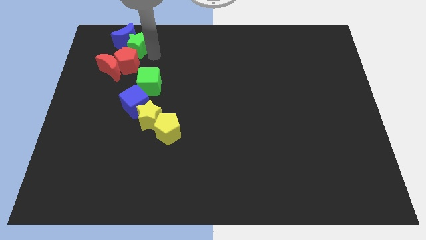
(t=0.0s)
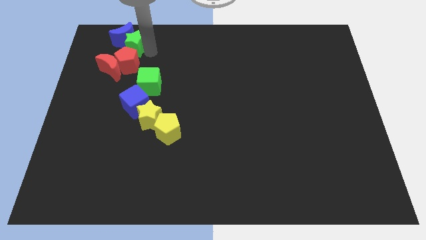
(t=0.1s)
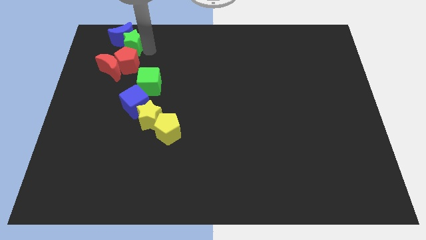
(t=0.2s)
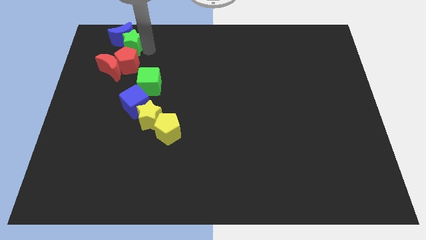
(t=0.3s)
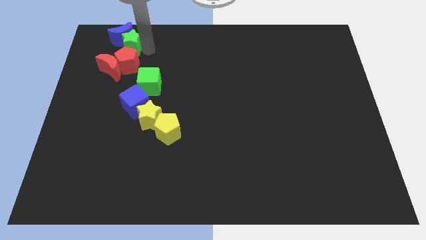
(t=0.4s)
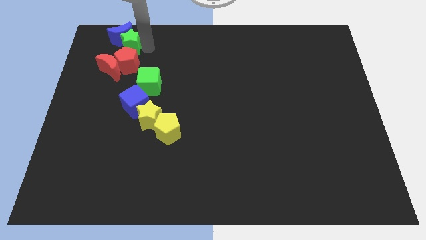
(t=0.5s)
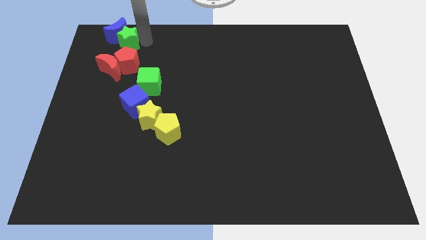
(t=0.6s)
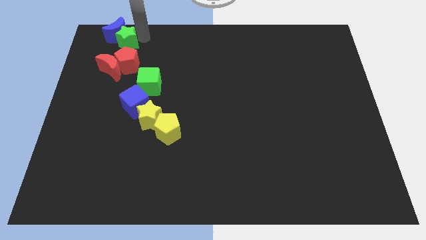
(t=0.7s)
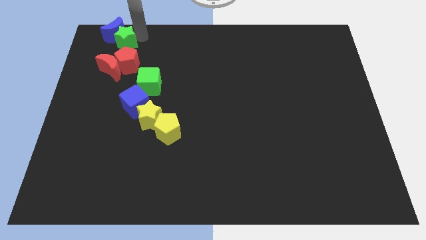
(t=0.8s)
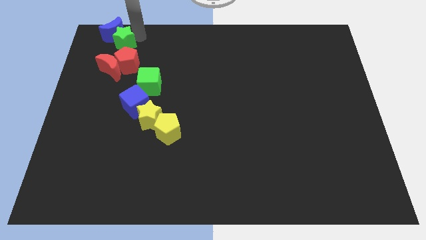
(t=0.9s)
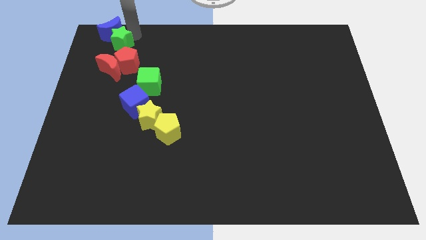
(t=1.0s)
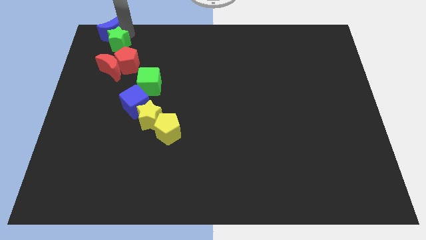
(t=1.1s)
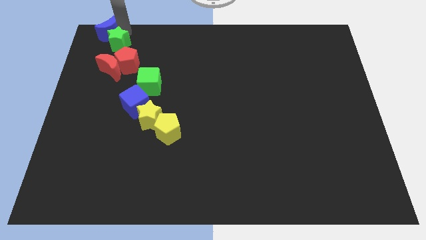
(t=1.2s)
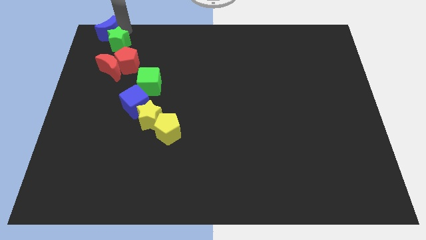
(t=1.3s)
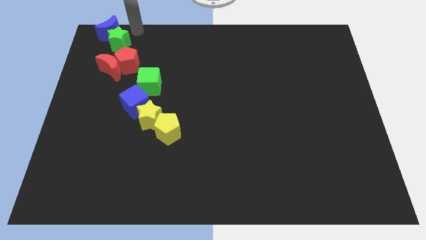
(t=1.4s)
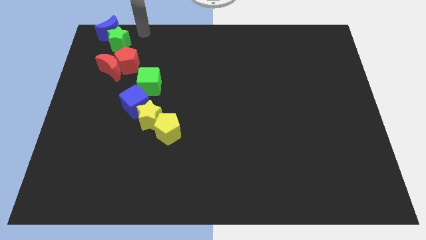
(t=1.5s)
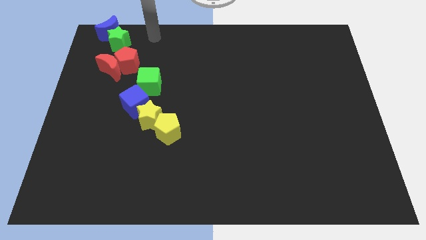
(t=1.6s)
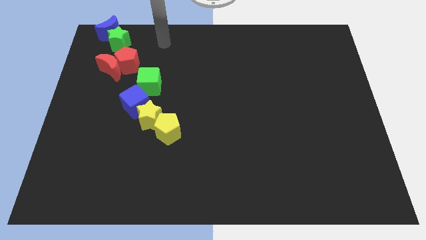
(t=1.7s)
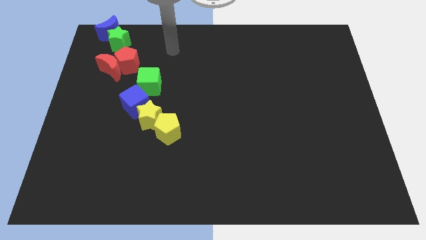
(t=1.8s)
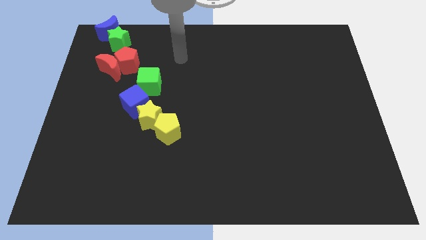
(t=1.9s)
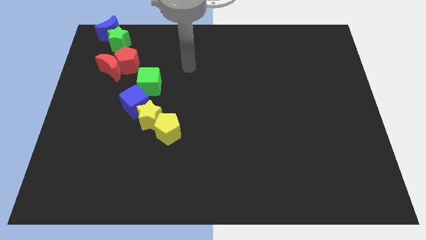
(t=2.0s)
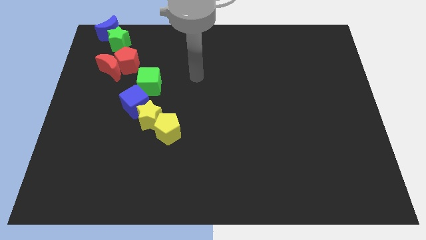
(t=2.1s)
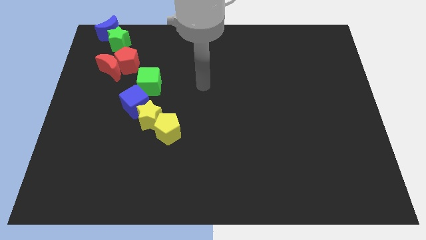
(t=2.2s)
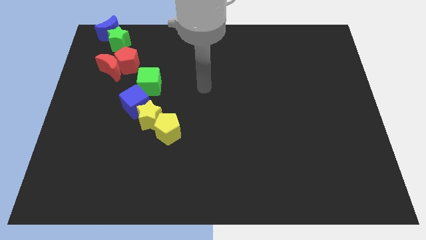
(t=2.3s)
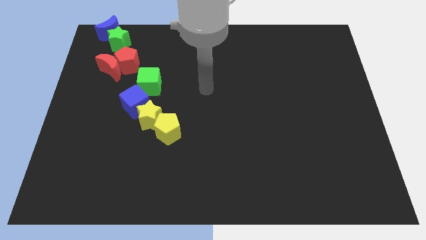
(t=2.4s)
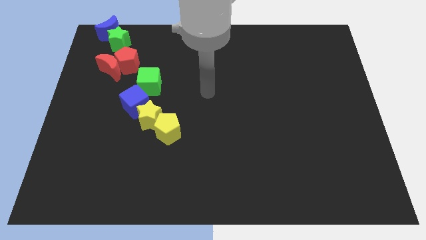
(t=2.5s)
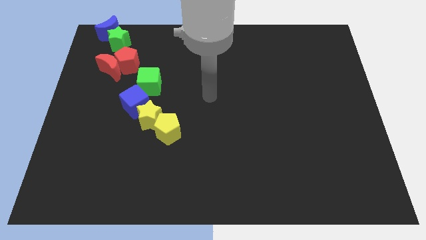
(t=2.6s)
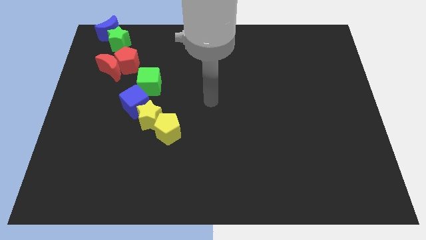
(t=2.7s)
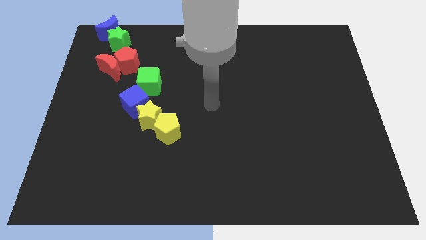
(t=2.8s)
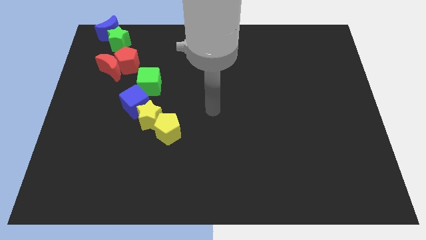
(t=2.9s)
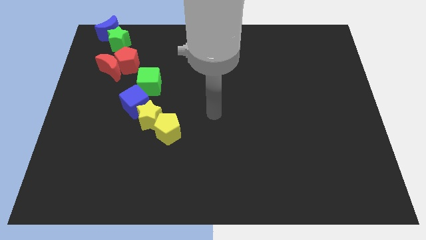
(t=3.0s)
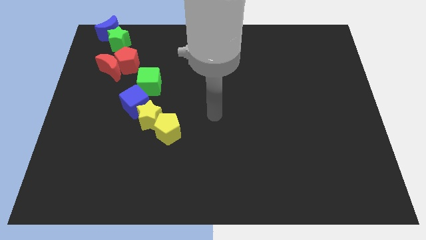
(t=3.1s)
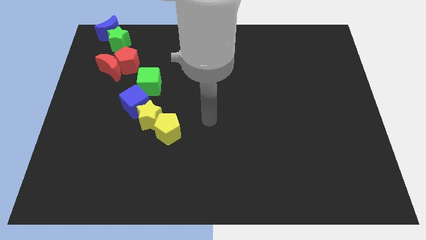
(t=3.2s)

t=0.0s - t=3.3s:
push the green star and blue moon to the top left corner of the board

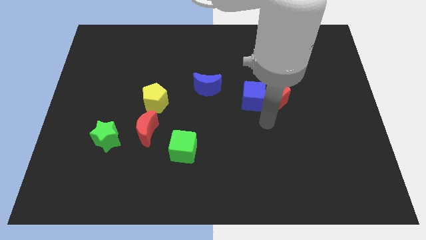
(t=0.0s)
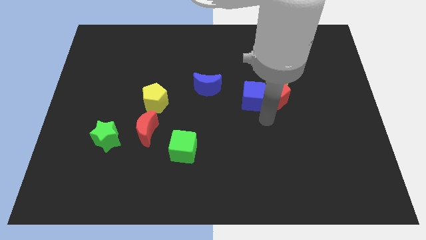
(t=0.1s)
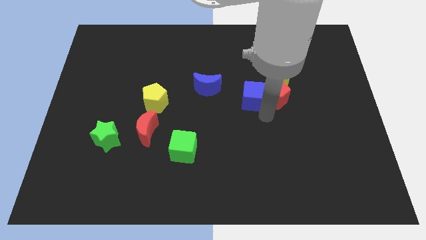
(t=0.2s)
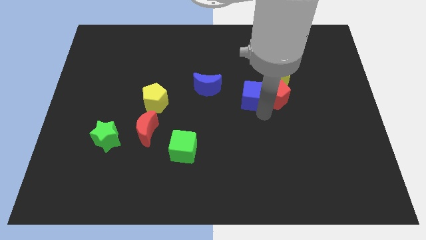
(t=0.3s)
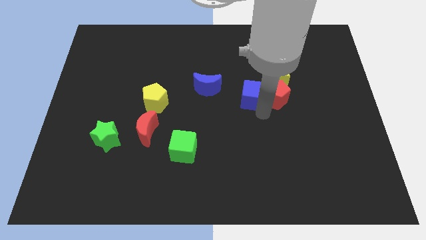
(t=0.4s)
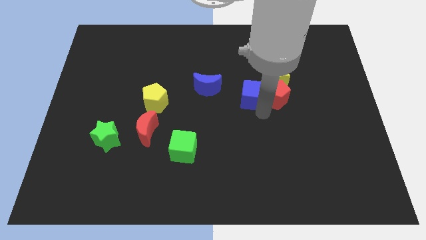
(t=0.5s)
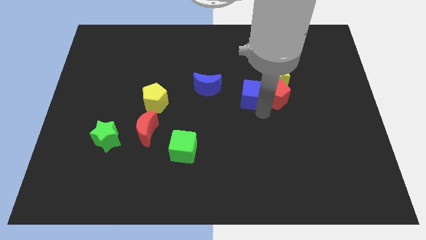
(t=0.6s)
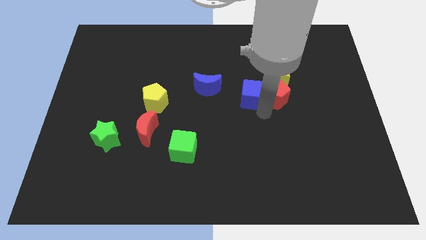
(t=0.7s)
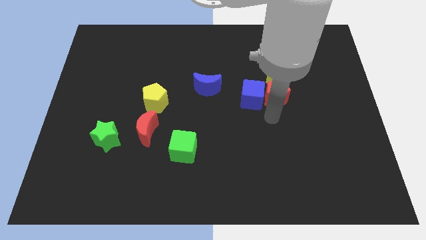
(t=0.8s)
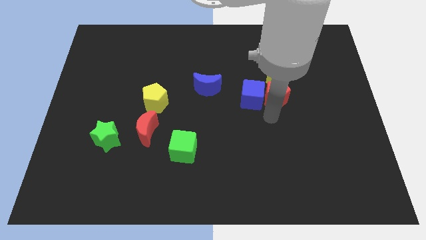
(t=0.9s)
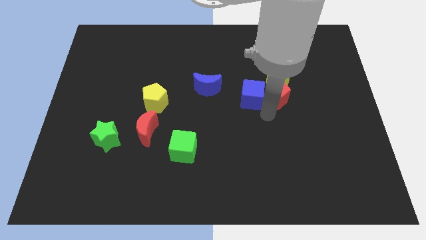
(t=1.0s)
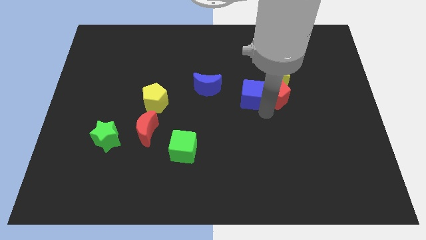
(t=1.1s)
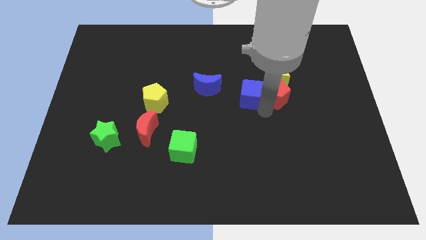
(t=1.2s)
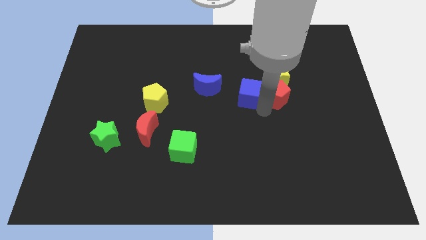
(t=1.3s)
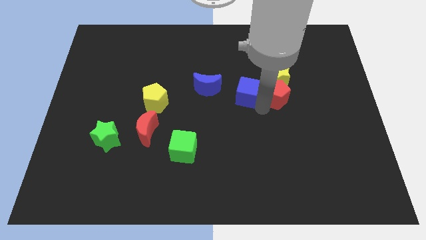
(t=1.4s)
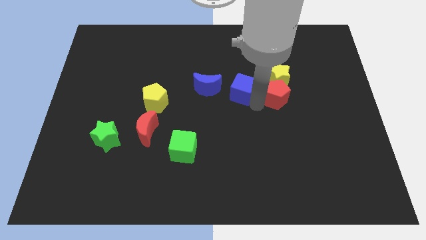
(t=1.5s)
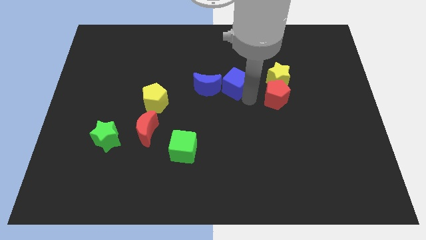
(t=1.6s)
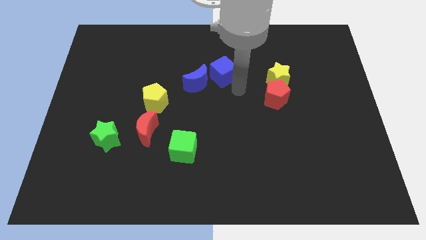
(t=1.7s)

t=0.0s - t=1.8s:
separate the blue cube from the red pentagon

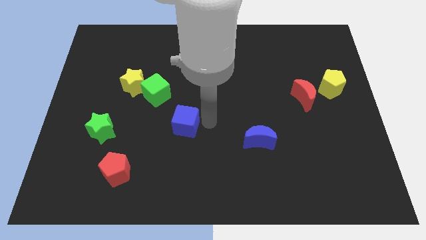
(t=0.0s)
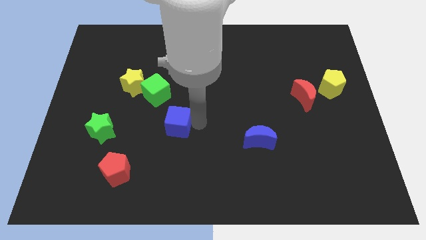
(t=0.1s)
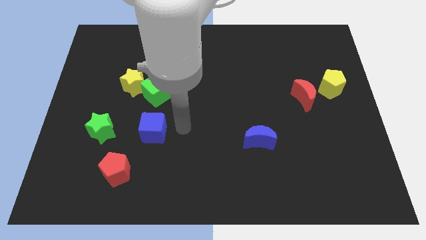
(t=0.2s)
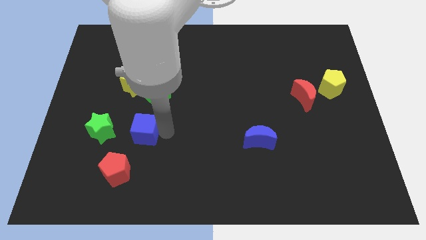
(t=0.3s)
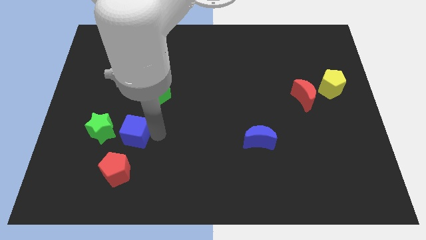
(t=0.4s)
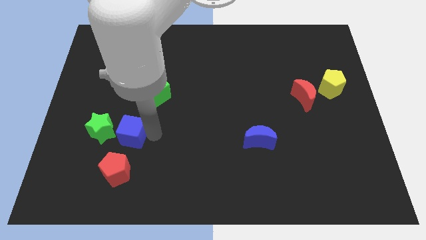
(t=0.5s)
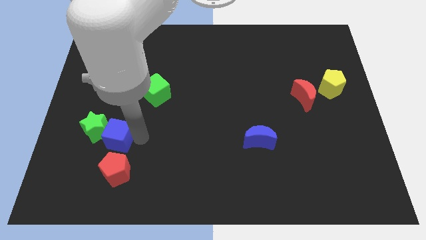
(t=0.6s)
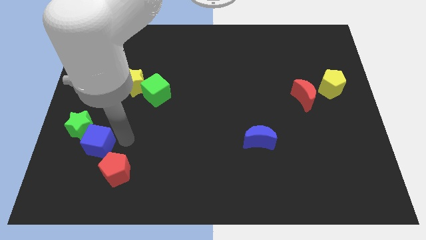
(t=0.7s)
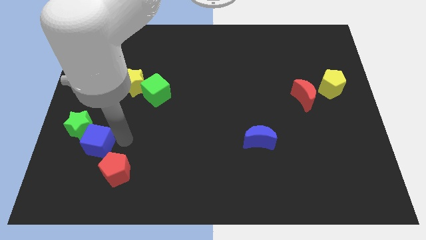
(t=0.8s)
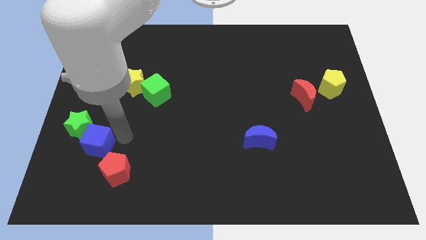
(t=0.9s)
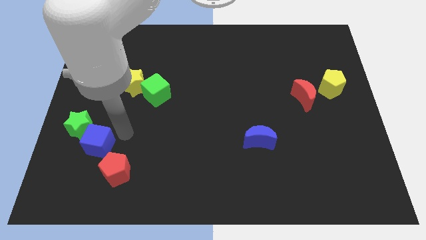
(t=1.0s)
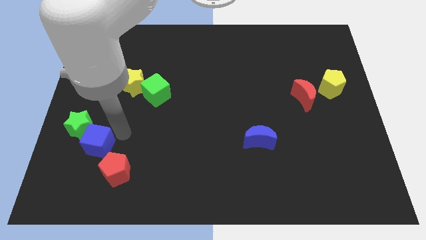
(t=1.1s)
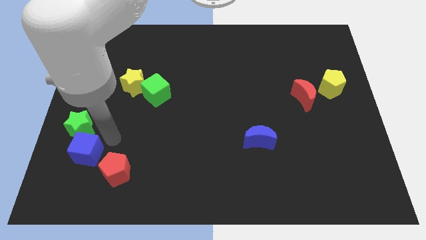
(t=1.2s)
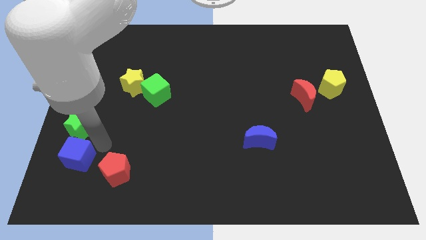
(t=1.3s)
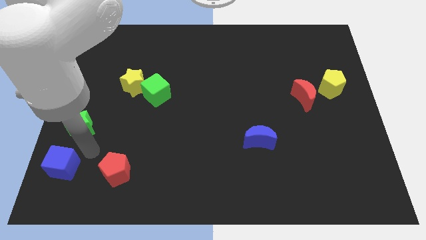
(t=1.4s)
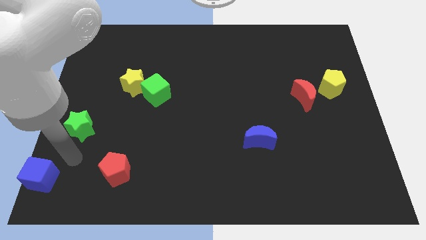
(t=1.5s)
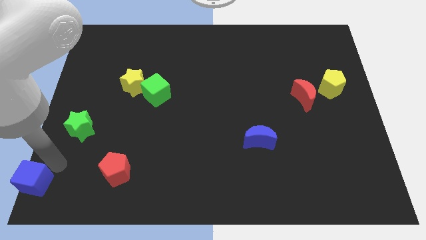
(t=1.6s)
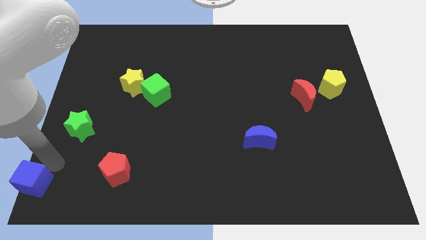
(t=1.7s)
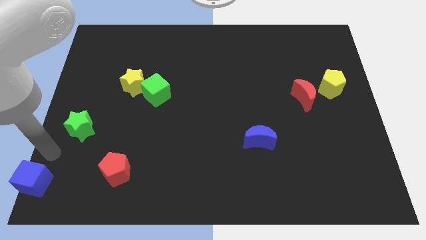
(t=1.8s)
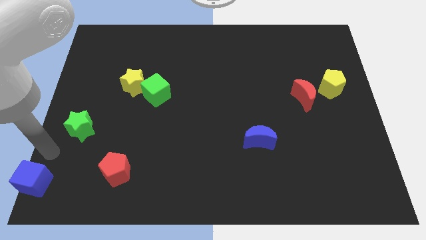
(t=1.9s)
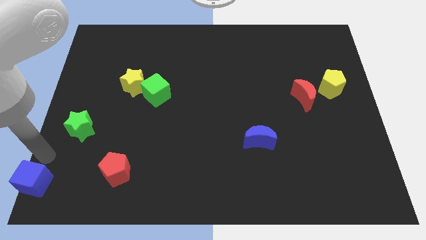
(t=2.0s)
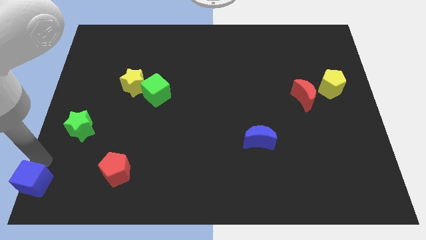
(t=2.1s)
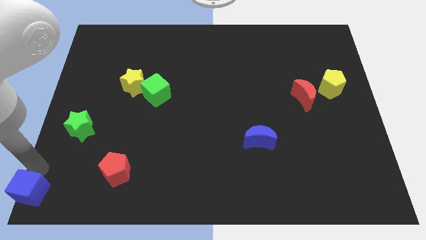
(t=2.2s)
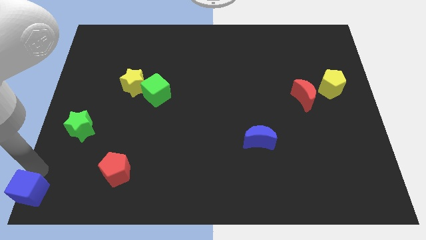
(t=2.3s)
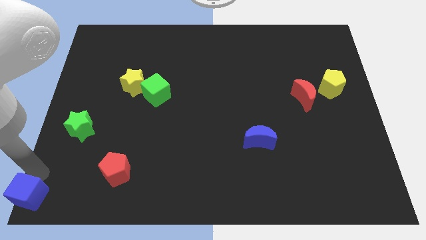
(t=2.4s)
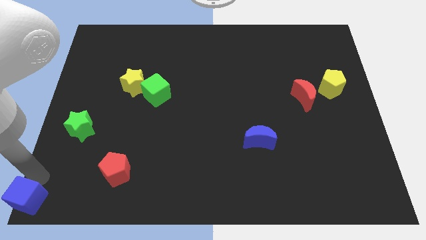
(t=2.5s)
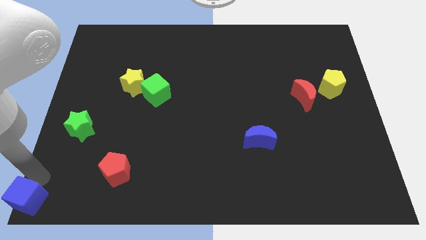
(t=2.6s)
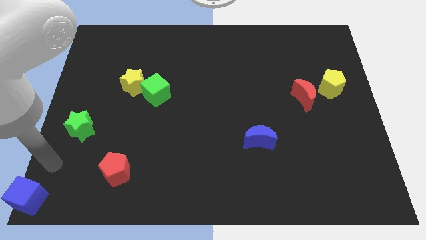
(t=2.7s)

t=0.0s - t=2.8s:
place blue cube towards bottom left corner

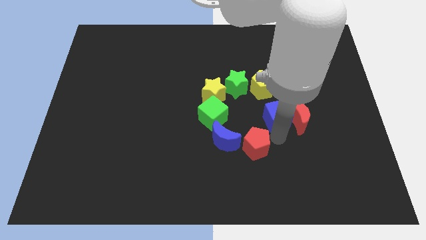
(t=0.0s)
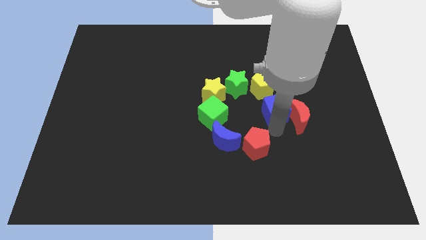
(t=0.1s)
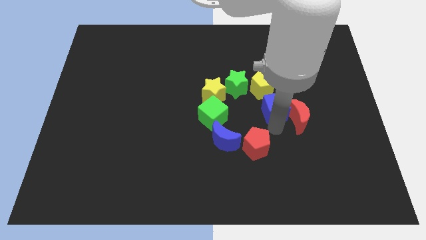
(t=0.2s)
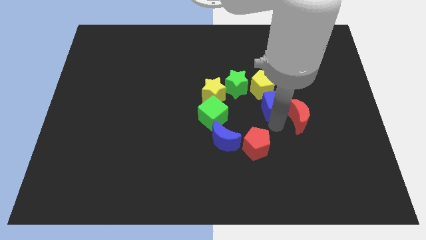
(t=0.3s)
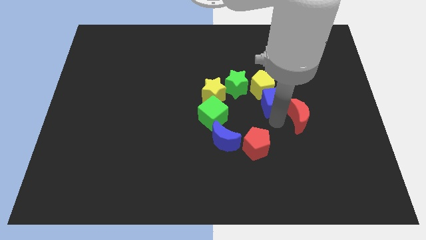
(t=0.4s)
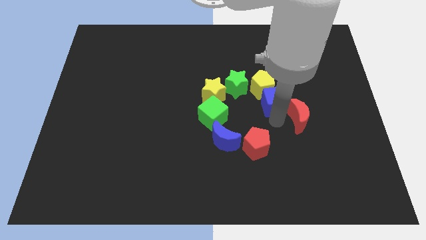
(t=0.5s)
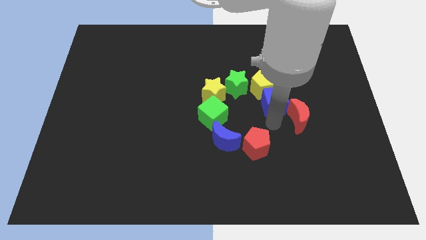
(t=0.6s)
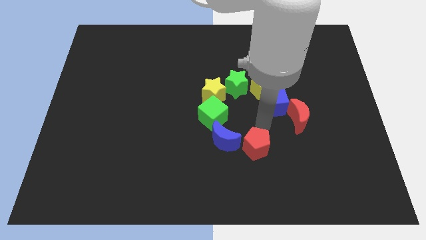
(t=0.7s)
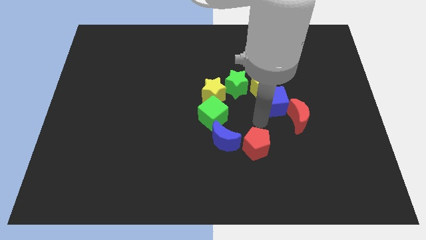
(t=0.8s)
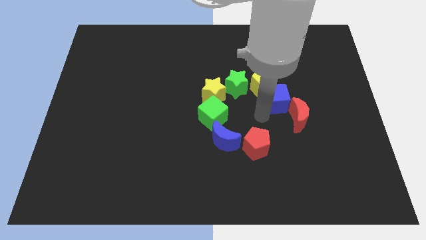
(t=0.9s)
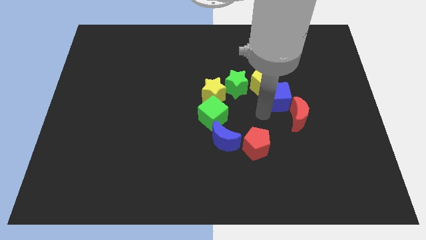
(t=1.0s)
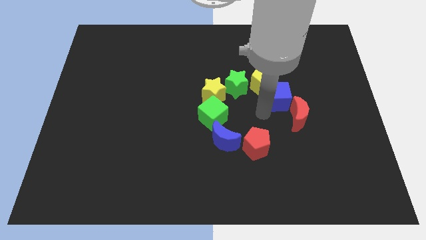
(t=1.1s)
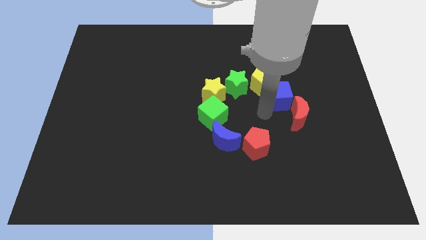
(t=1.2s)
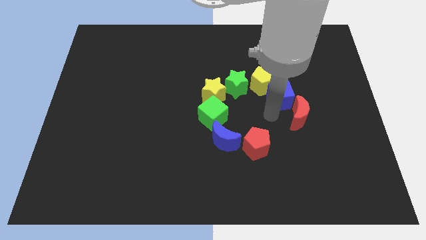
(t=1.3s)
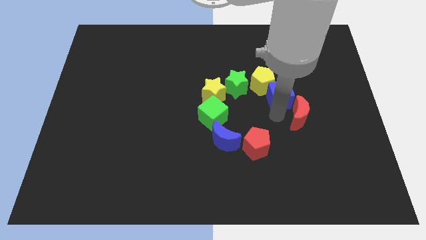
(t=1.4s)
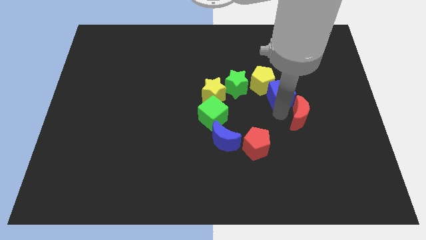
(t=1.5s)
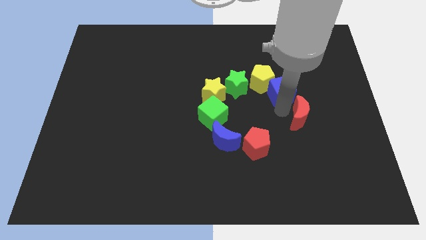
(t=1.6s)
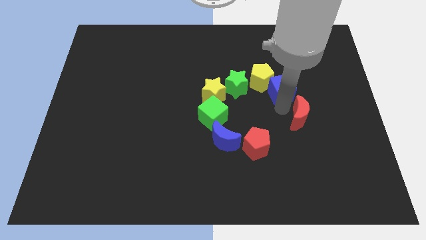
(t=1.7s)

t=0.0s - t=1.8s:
push the blue cube into the yellow pentagon
